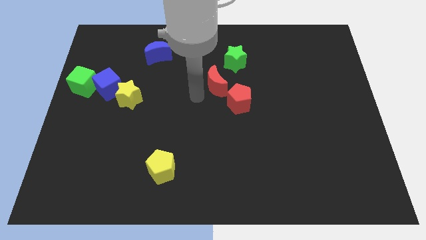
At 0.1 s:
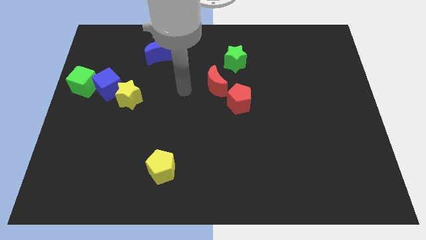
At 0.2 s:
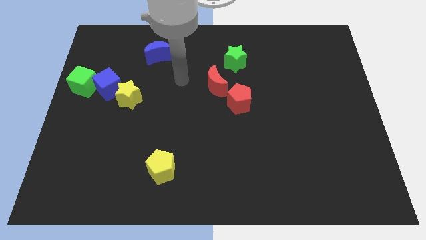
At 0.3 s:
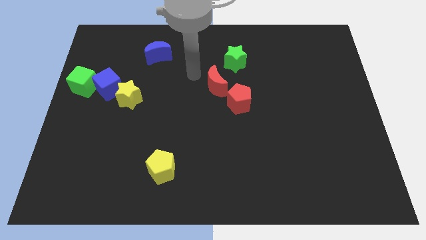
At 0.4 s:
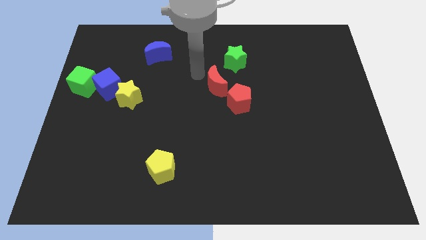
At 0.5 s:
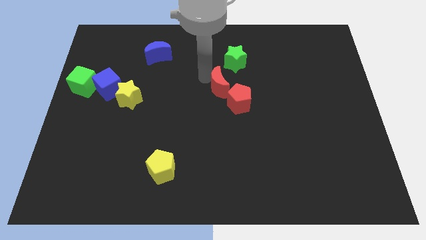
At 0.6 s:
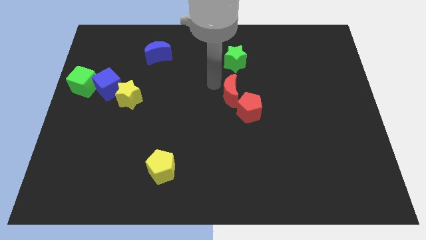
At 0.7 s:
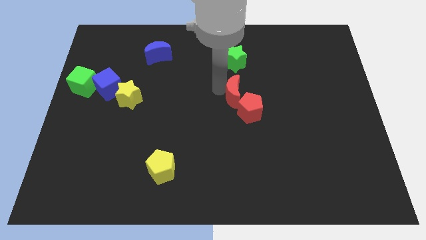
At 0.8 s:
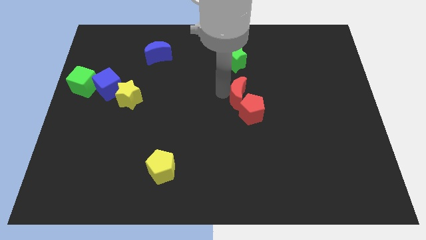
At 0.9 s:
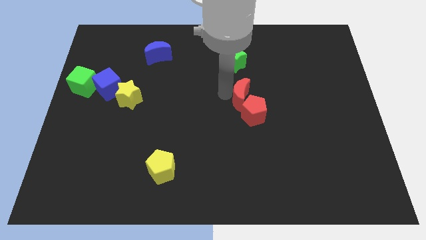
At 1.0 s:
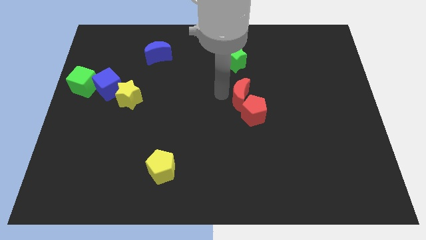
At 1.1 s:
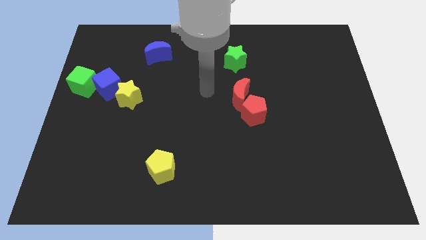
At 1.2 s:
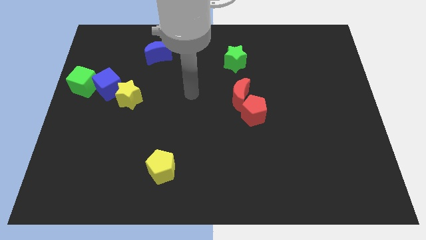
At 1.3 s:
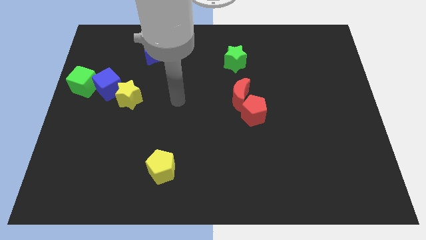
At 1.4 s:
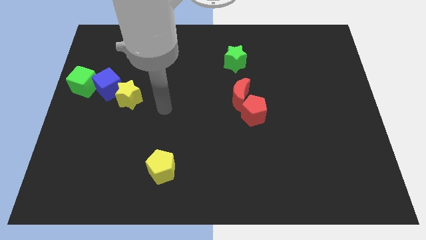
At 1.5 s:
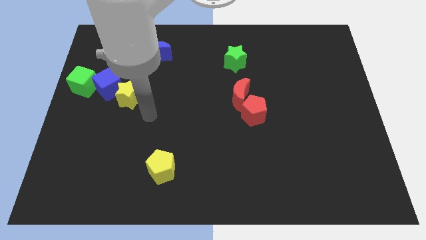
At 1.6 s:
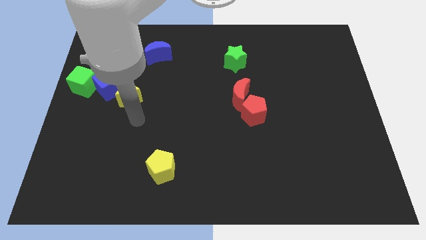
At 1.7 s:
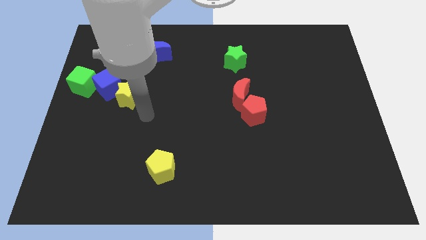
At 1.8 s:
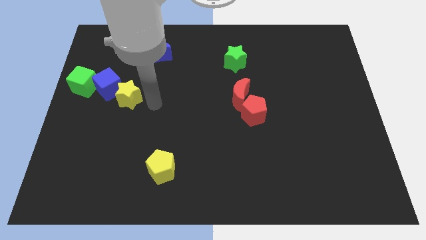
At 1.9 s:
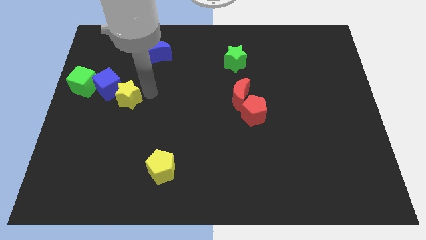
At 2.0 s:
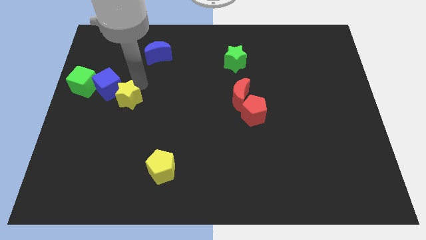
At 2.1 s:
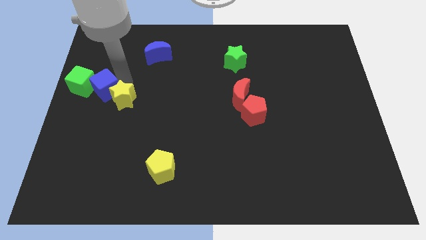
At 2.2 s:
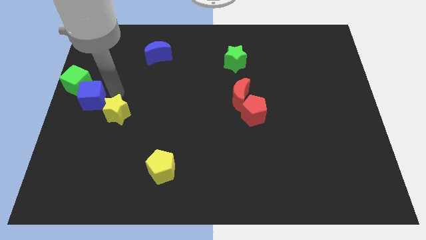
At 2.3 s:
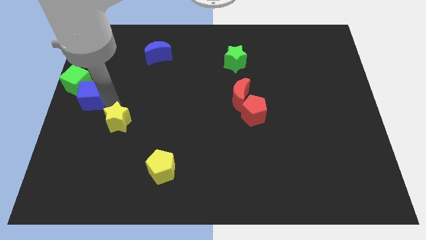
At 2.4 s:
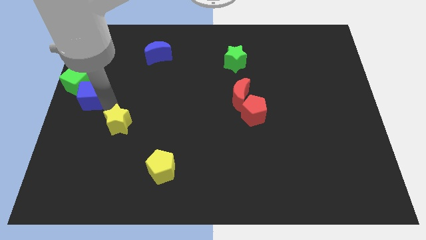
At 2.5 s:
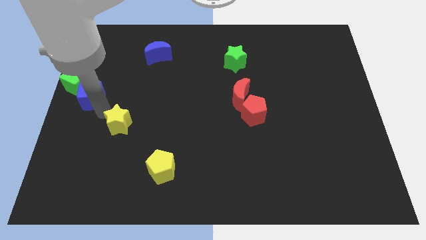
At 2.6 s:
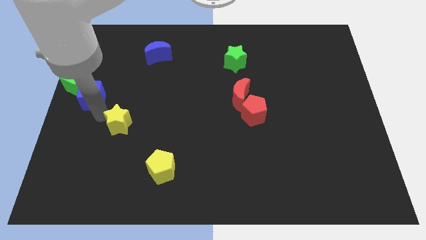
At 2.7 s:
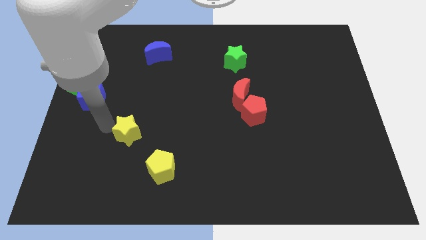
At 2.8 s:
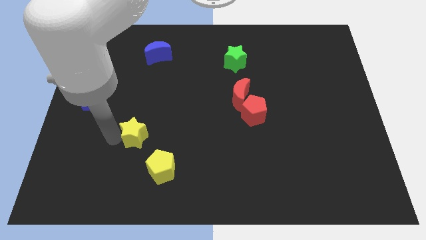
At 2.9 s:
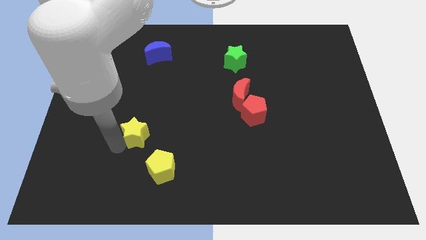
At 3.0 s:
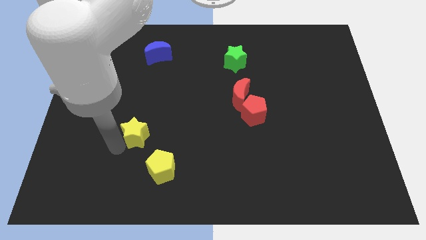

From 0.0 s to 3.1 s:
place the yellow star diagonally top left to the yellow pentagon

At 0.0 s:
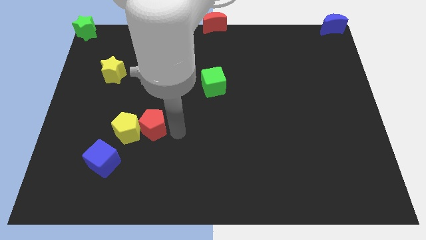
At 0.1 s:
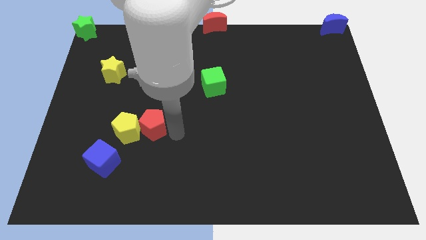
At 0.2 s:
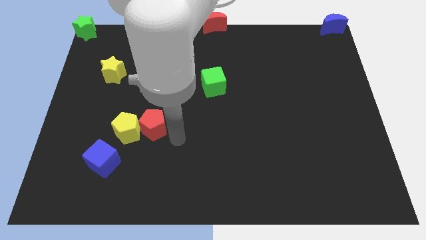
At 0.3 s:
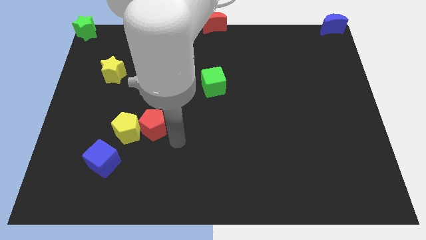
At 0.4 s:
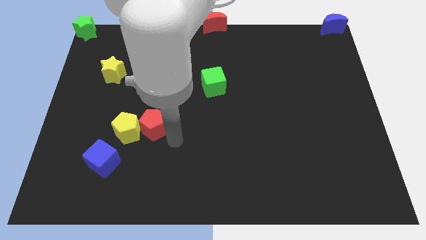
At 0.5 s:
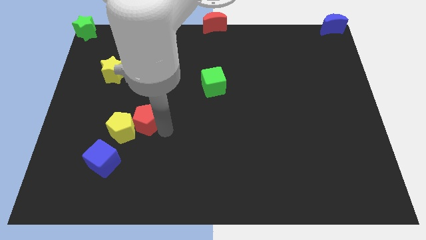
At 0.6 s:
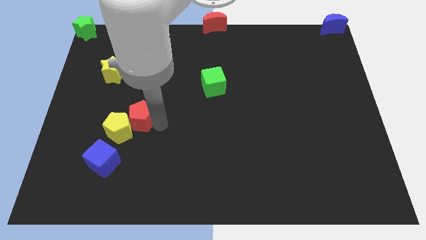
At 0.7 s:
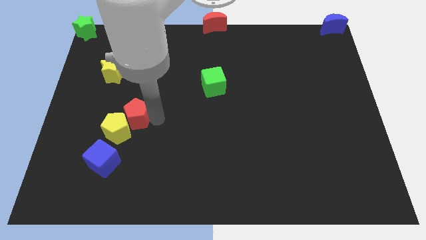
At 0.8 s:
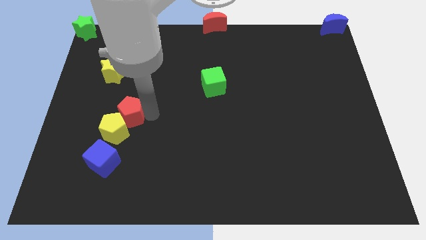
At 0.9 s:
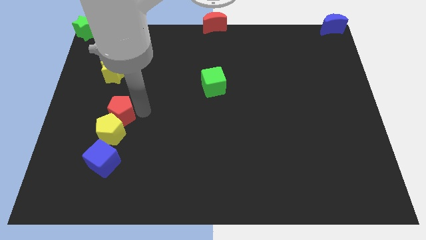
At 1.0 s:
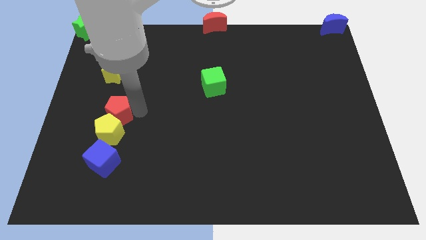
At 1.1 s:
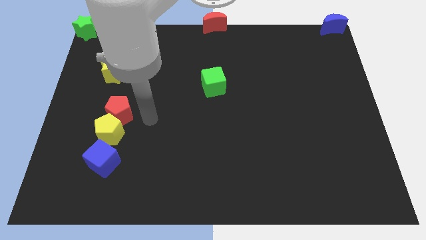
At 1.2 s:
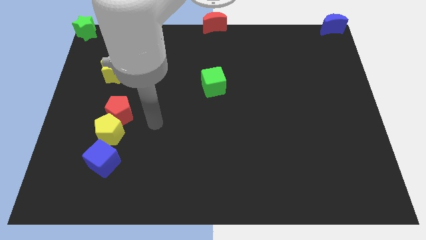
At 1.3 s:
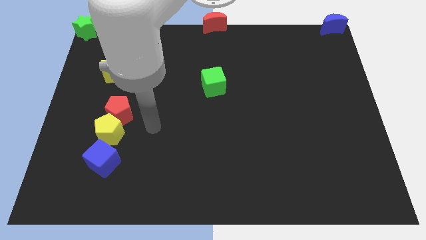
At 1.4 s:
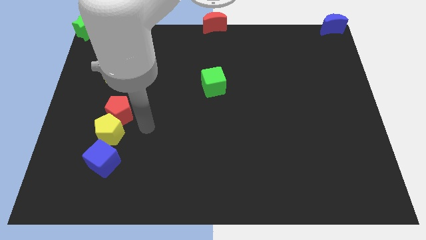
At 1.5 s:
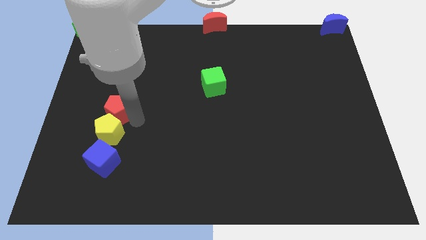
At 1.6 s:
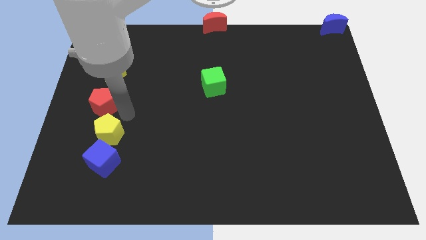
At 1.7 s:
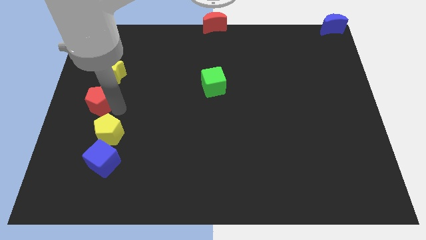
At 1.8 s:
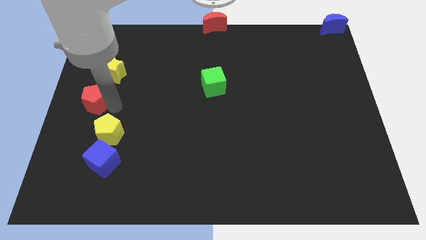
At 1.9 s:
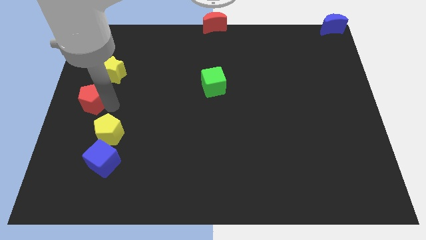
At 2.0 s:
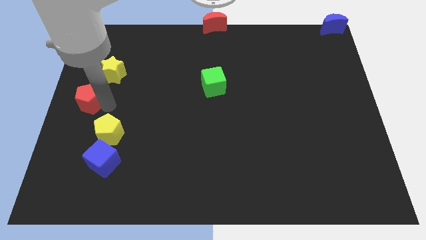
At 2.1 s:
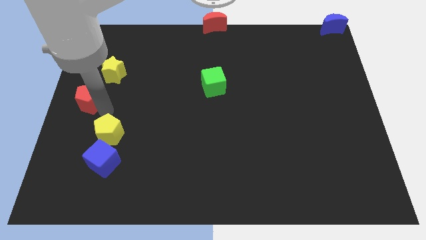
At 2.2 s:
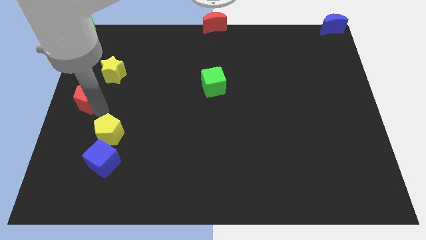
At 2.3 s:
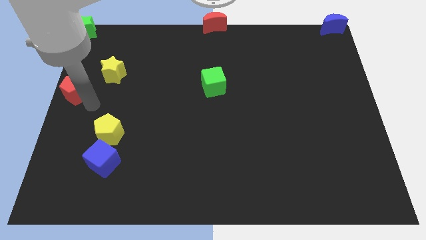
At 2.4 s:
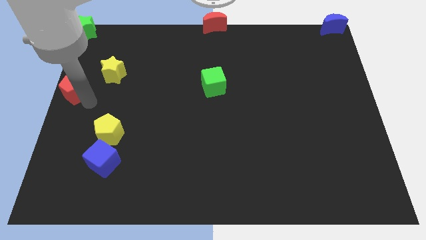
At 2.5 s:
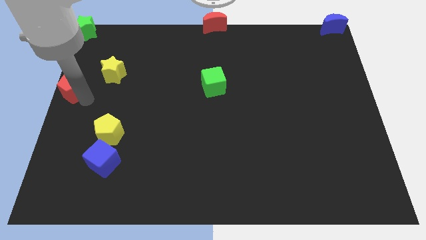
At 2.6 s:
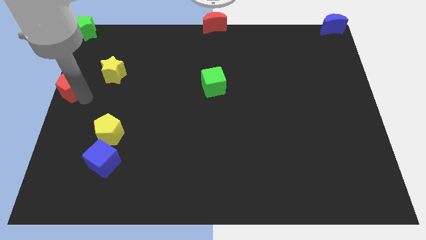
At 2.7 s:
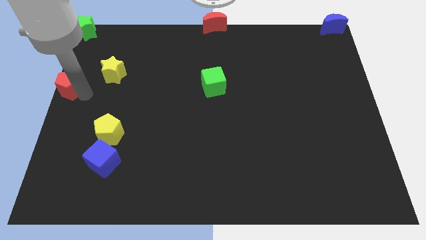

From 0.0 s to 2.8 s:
move the red pentagan towards the middle left corner of the board

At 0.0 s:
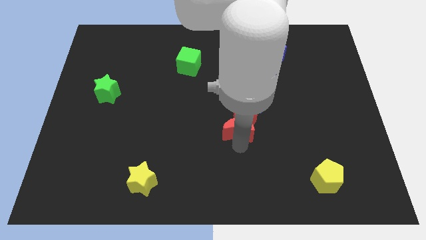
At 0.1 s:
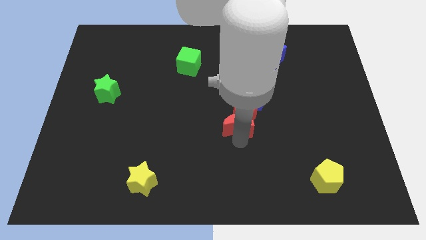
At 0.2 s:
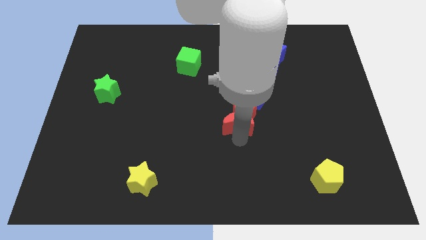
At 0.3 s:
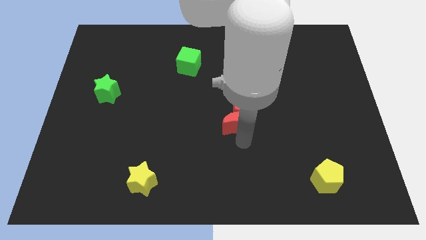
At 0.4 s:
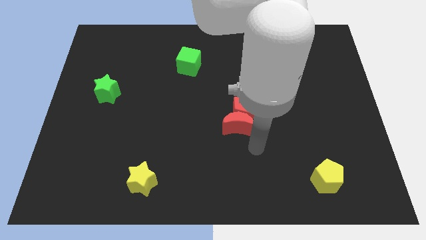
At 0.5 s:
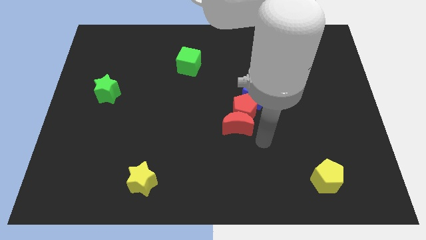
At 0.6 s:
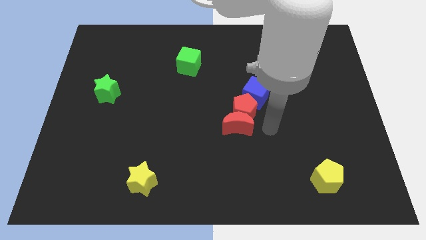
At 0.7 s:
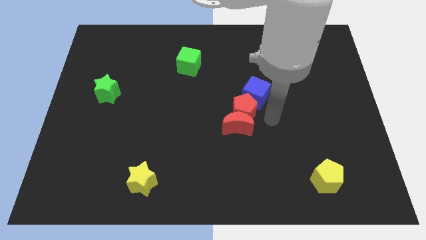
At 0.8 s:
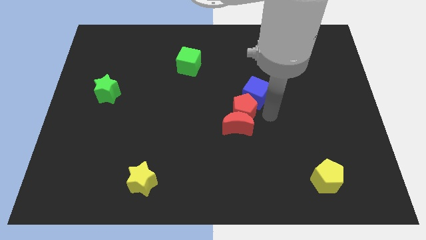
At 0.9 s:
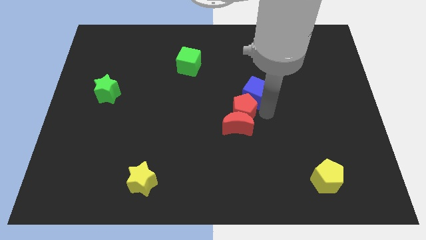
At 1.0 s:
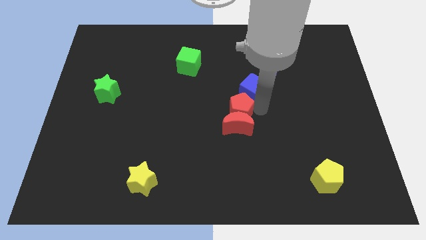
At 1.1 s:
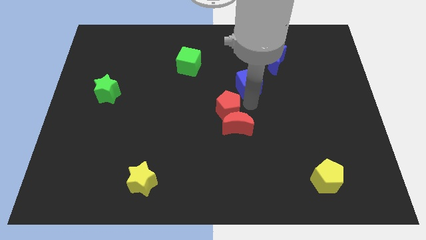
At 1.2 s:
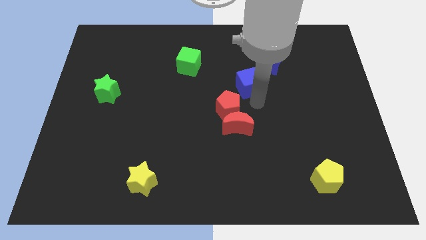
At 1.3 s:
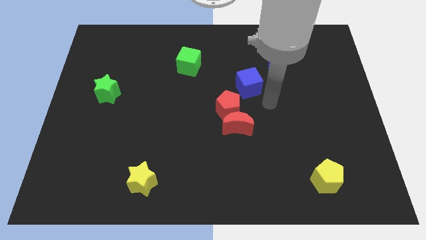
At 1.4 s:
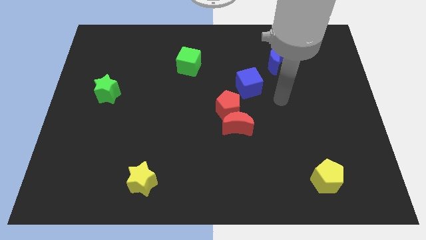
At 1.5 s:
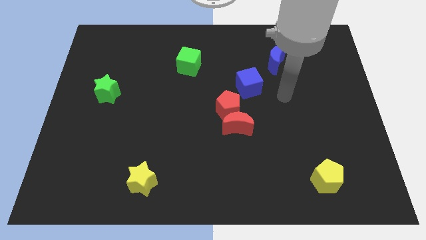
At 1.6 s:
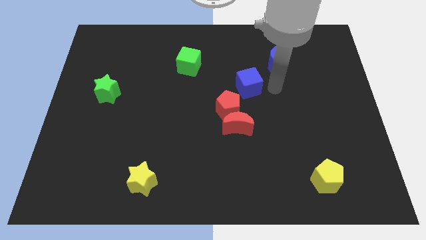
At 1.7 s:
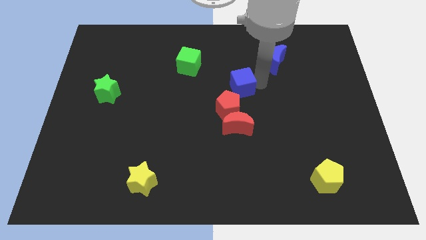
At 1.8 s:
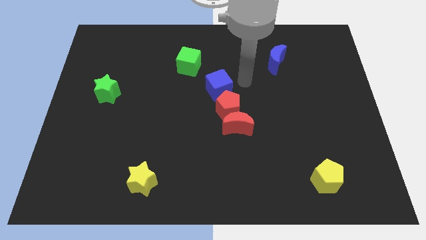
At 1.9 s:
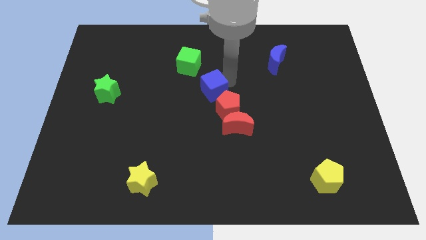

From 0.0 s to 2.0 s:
move the blue crescent to the top of red pentagon

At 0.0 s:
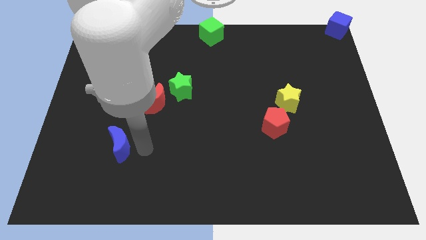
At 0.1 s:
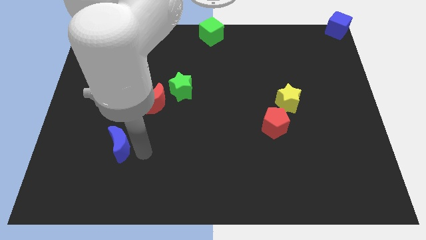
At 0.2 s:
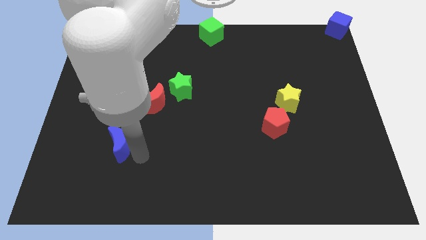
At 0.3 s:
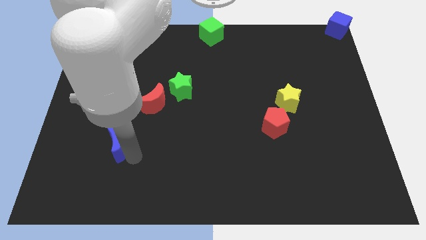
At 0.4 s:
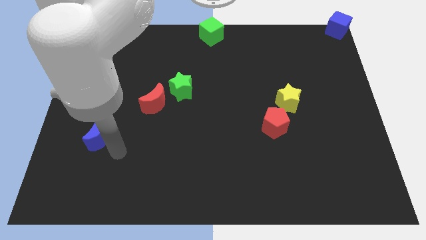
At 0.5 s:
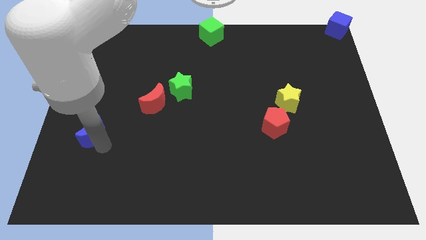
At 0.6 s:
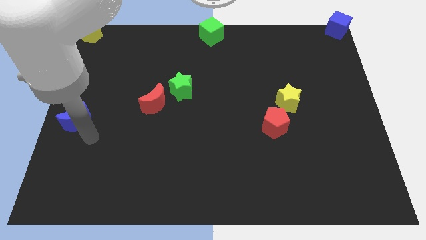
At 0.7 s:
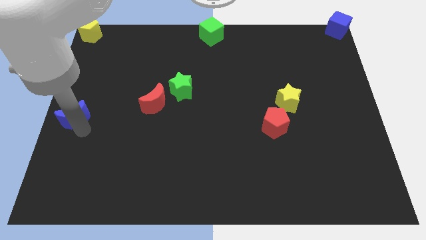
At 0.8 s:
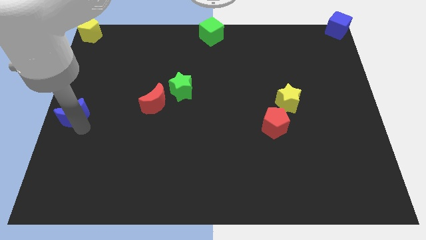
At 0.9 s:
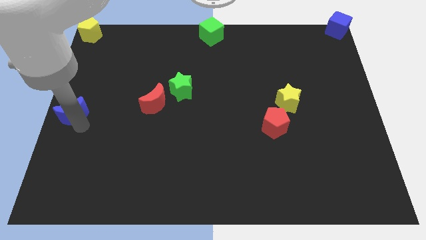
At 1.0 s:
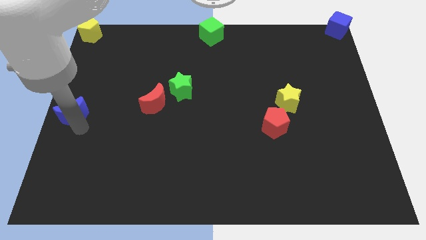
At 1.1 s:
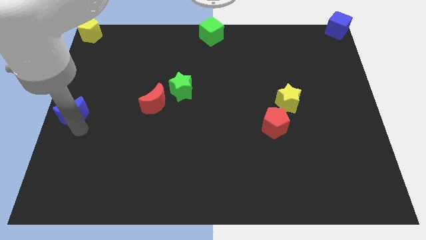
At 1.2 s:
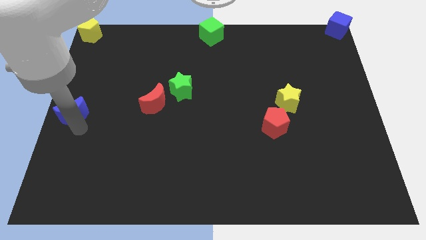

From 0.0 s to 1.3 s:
push the blue moon to the center left of the board
